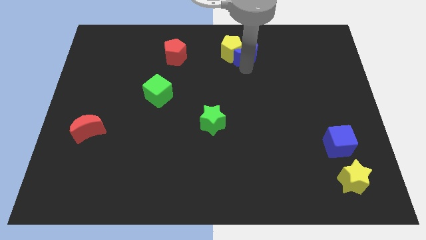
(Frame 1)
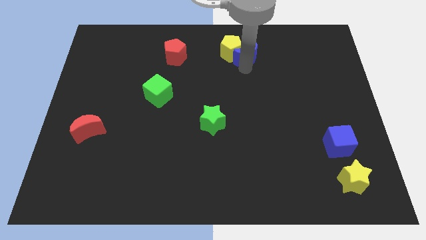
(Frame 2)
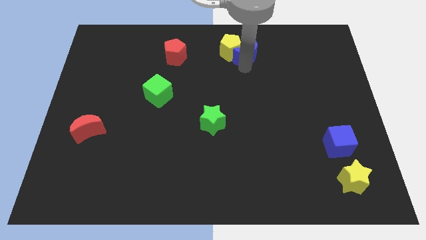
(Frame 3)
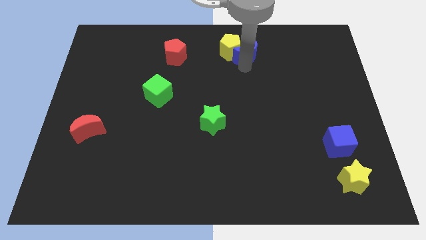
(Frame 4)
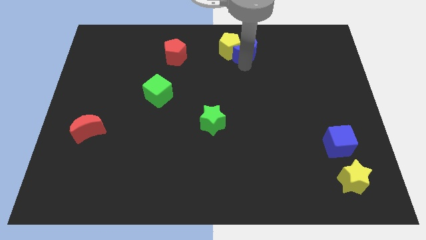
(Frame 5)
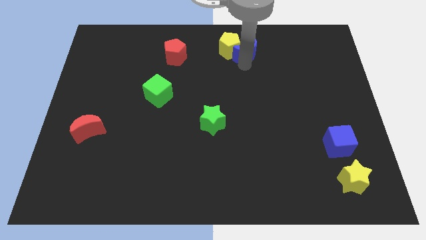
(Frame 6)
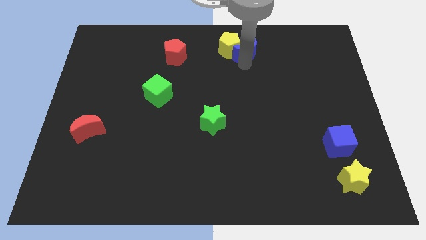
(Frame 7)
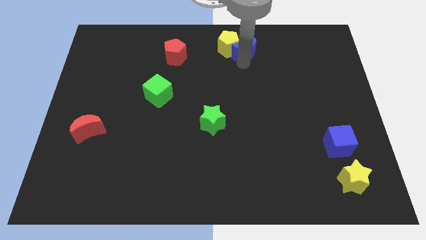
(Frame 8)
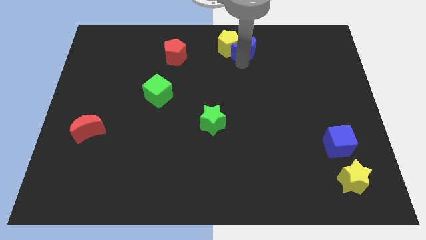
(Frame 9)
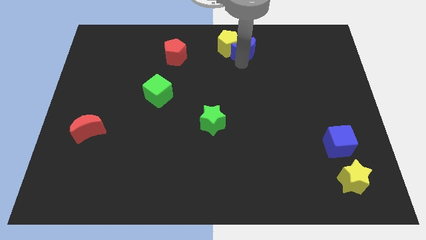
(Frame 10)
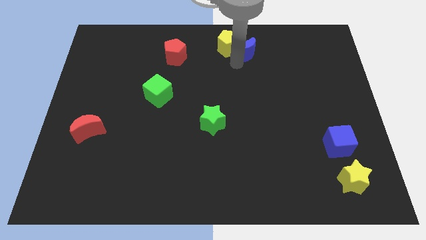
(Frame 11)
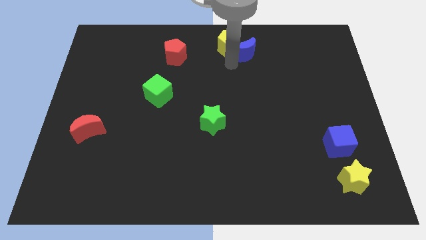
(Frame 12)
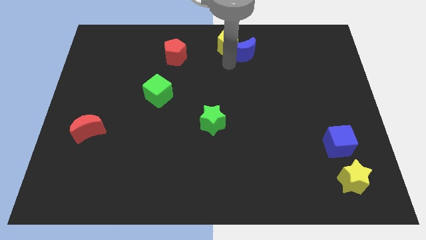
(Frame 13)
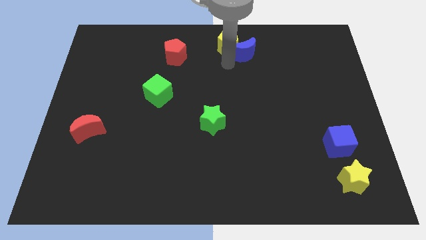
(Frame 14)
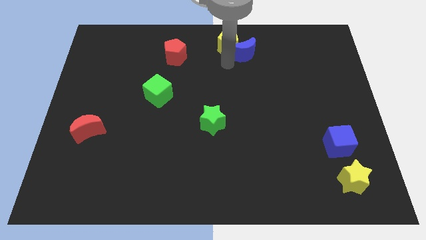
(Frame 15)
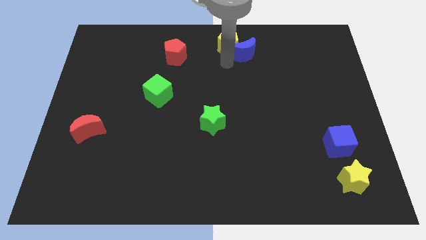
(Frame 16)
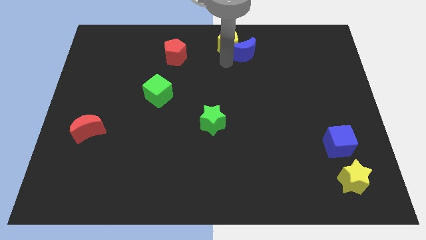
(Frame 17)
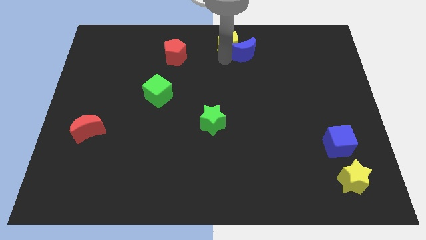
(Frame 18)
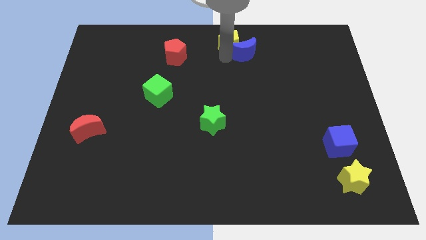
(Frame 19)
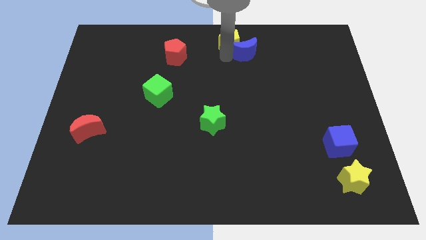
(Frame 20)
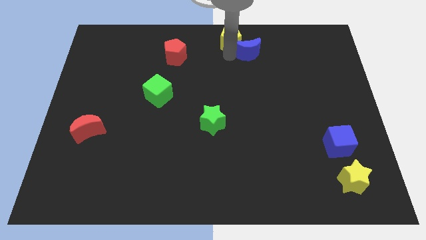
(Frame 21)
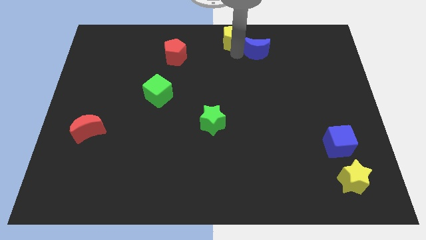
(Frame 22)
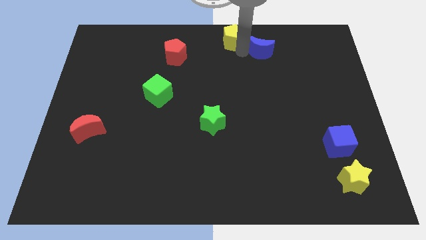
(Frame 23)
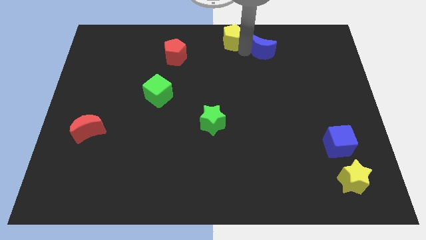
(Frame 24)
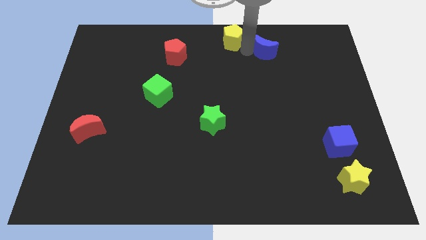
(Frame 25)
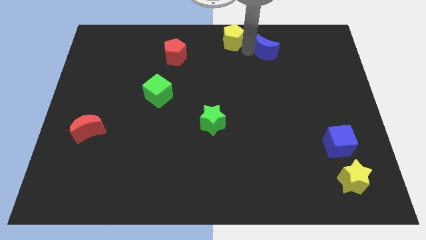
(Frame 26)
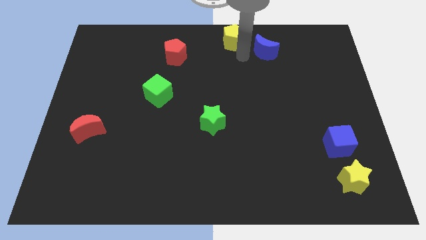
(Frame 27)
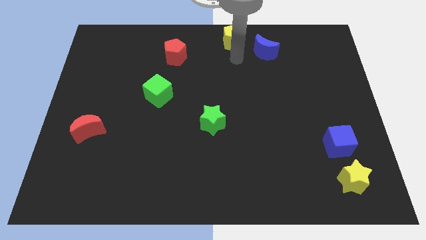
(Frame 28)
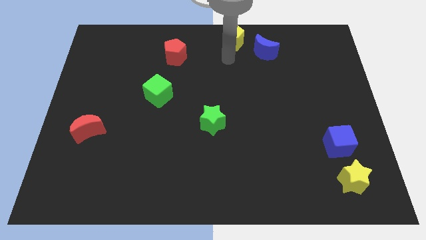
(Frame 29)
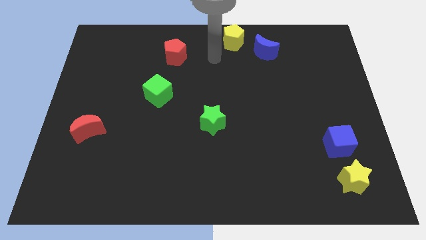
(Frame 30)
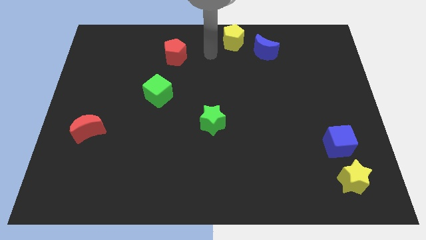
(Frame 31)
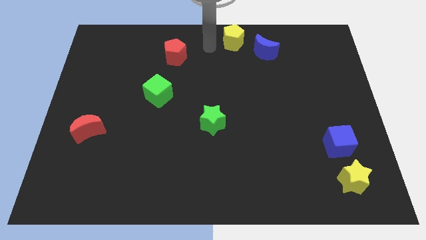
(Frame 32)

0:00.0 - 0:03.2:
push blue crescent slightly towards right

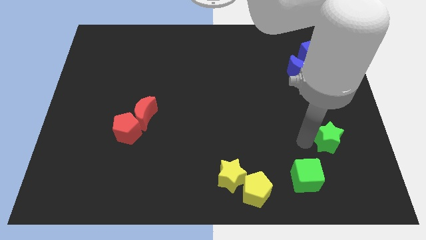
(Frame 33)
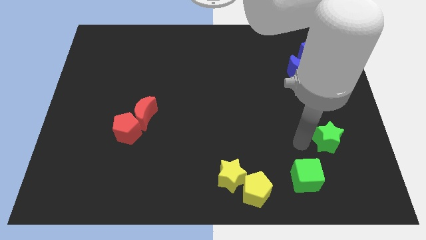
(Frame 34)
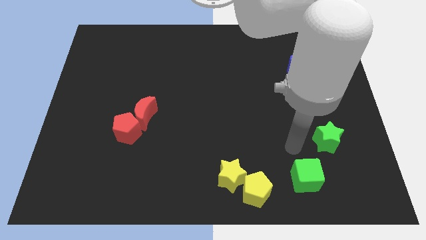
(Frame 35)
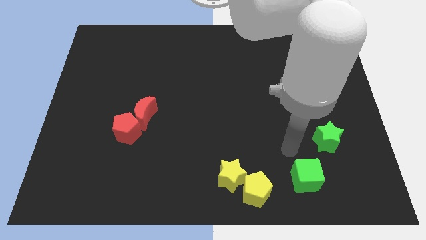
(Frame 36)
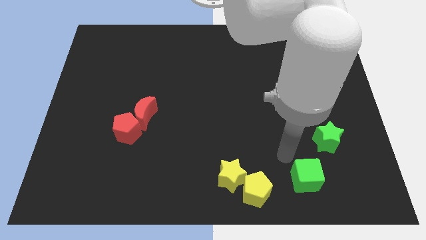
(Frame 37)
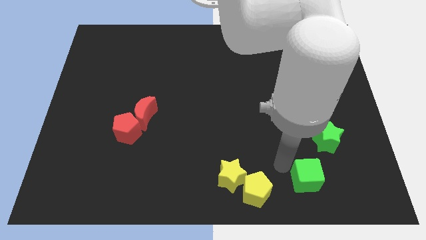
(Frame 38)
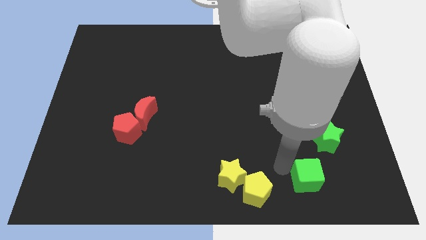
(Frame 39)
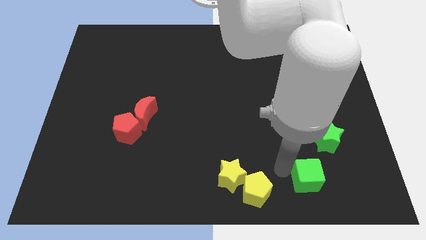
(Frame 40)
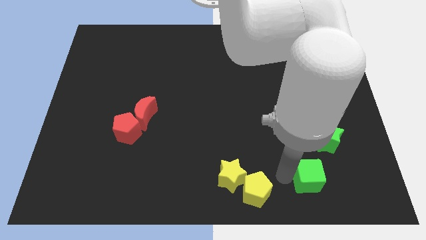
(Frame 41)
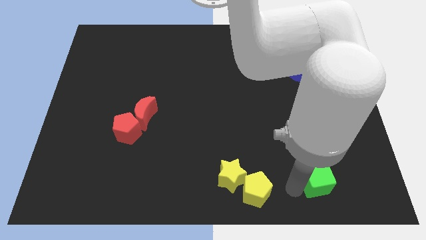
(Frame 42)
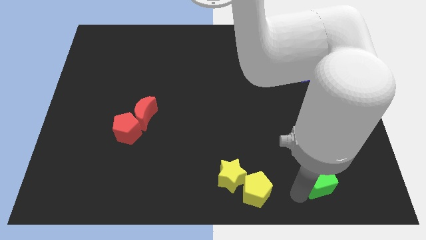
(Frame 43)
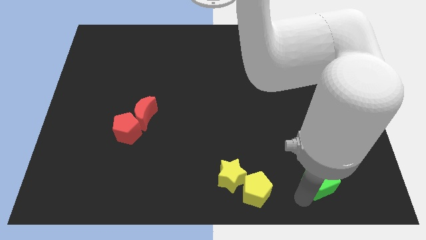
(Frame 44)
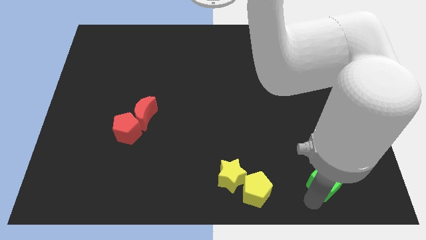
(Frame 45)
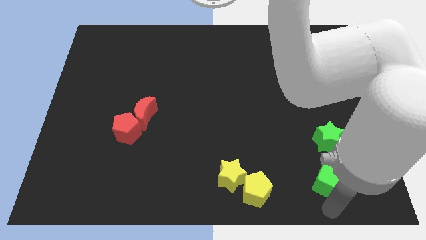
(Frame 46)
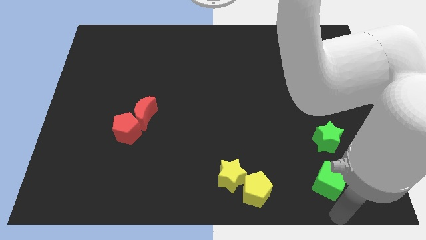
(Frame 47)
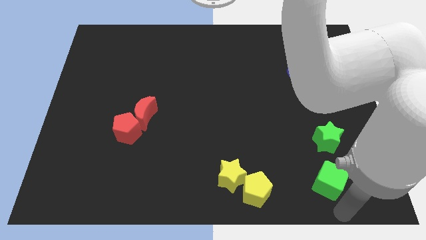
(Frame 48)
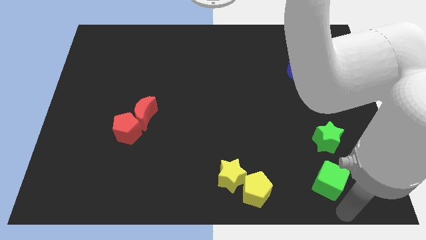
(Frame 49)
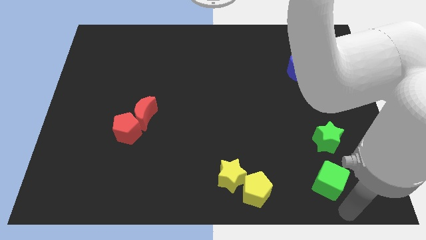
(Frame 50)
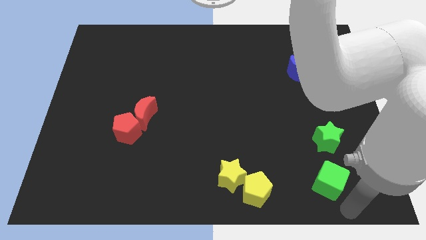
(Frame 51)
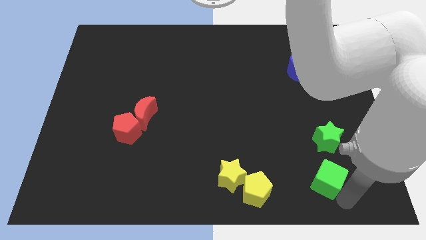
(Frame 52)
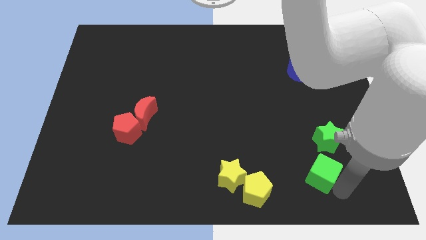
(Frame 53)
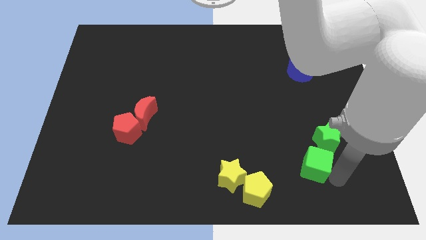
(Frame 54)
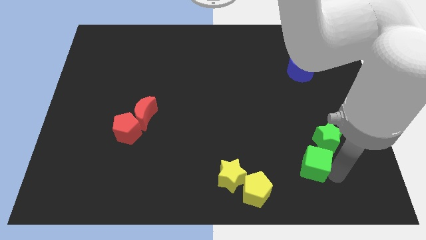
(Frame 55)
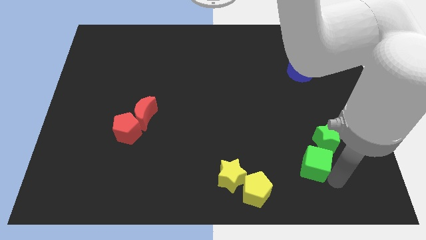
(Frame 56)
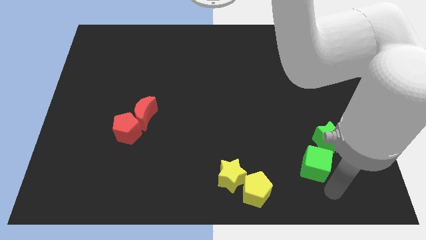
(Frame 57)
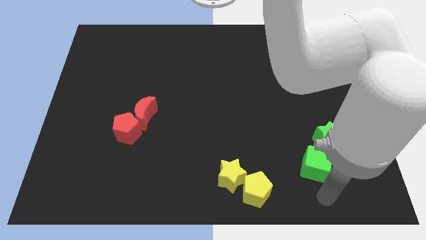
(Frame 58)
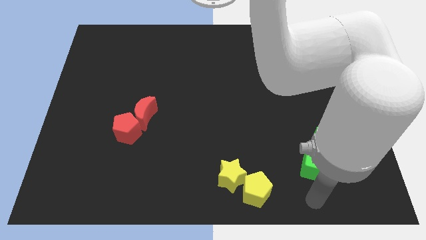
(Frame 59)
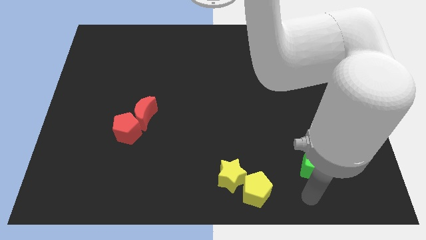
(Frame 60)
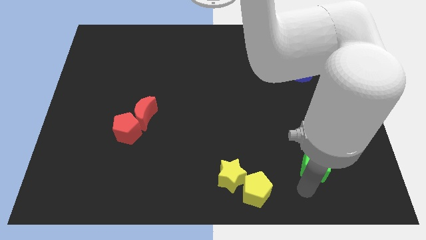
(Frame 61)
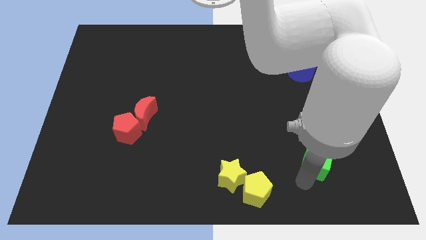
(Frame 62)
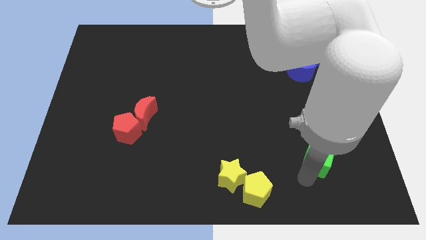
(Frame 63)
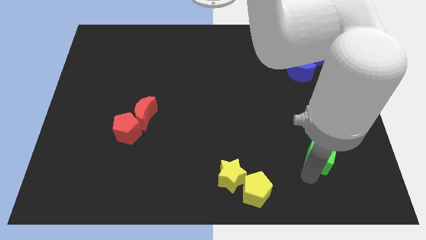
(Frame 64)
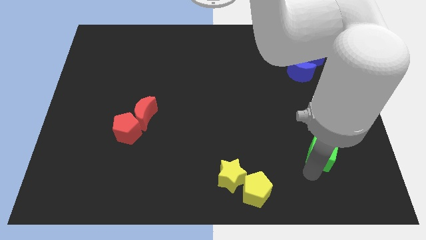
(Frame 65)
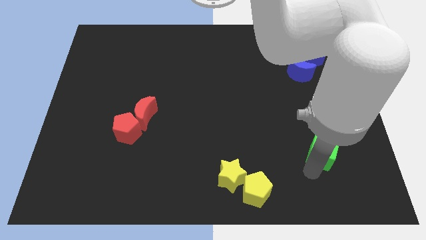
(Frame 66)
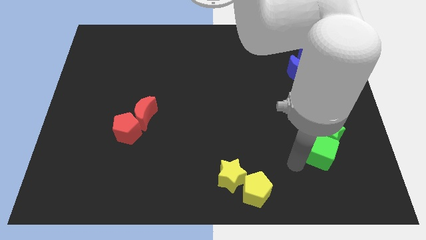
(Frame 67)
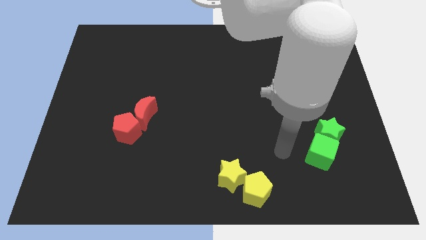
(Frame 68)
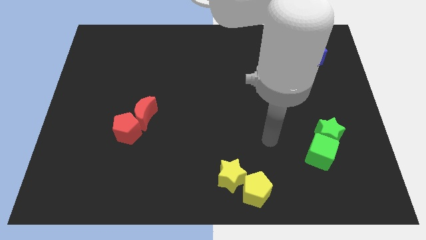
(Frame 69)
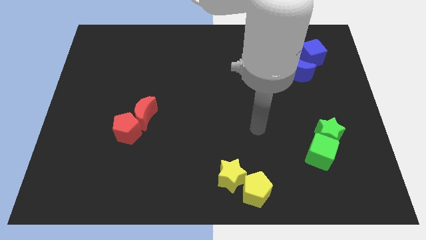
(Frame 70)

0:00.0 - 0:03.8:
push green cube slightly towards up

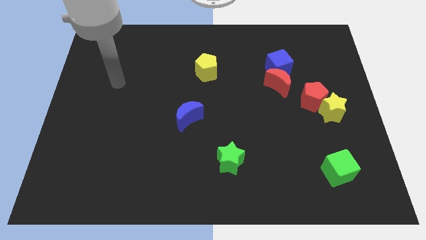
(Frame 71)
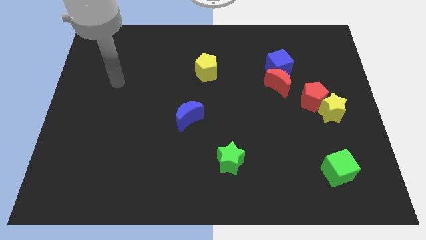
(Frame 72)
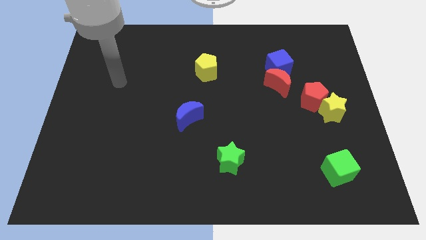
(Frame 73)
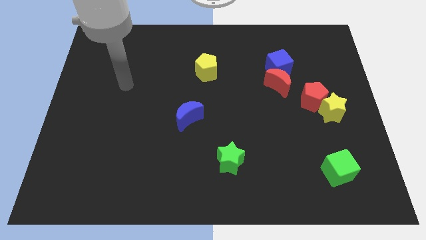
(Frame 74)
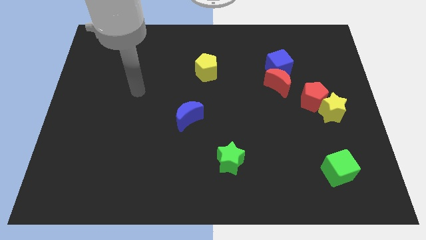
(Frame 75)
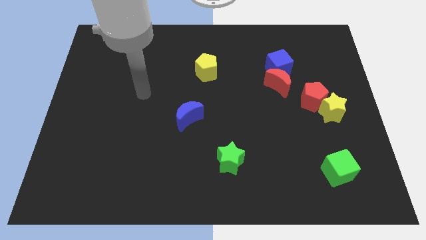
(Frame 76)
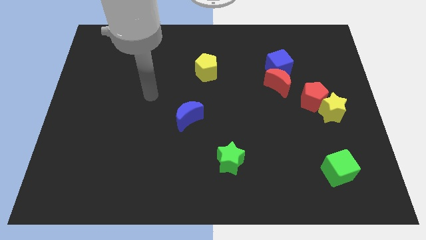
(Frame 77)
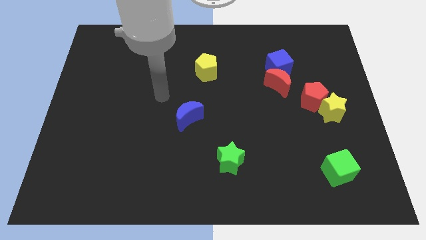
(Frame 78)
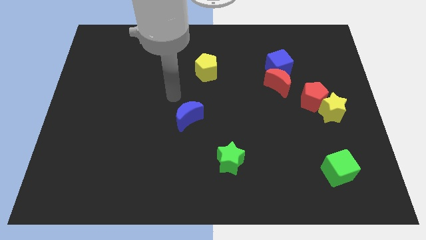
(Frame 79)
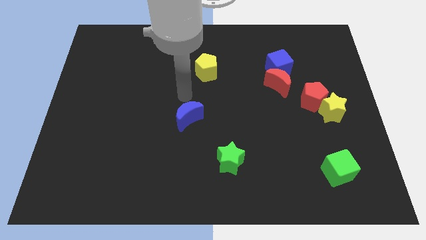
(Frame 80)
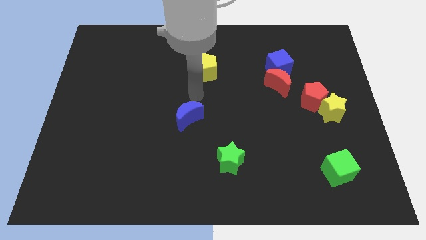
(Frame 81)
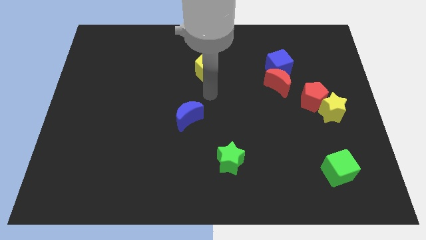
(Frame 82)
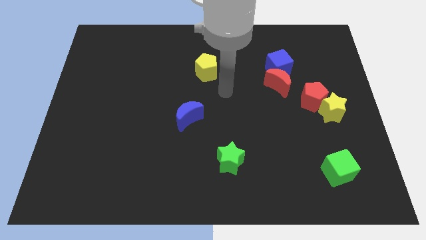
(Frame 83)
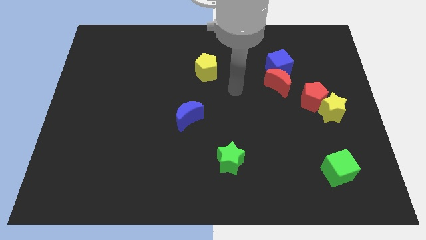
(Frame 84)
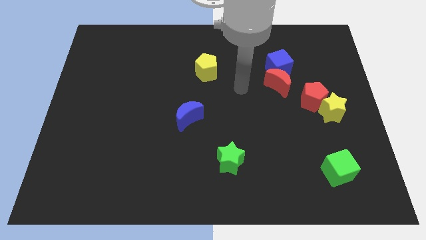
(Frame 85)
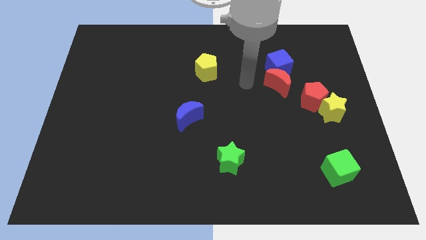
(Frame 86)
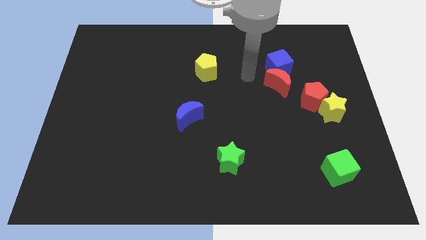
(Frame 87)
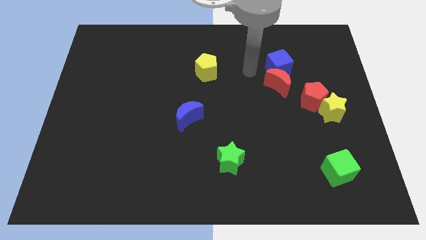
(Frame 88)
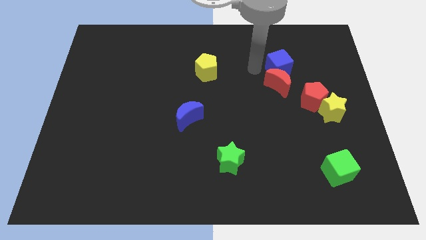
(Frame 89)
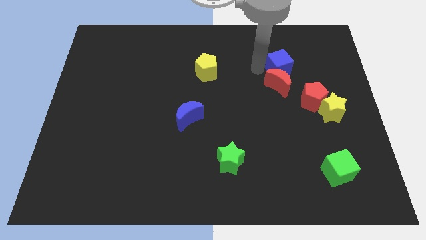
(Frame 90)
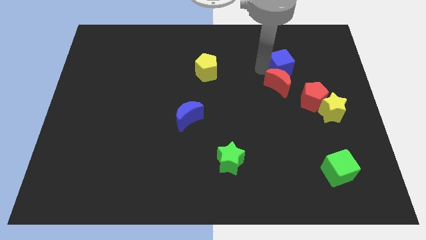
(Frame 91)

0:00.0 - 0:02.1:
separate the red crescent and the blue cube
